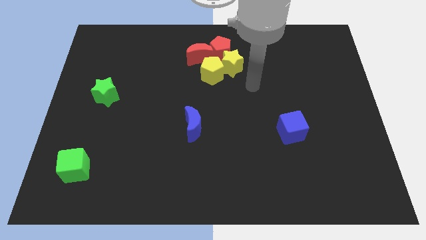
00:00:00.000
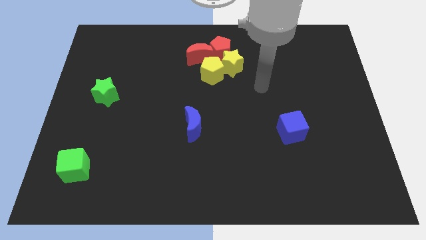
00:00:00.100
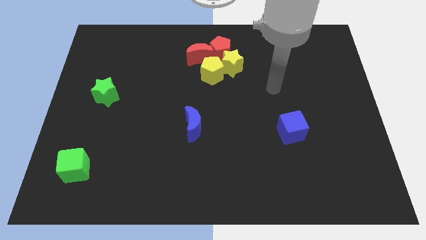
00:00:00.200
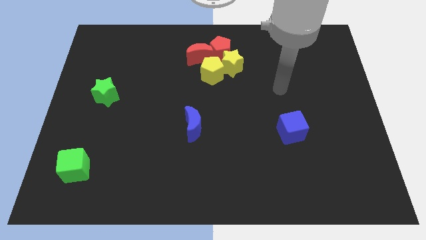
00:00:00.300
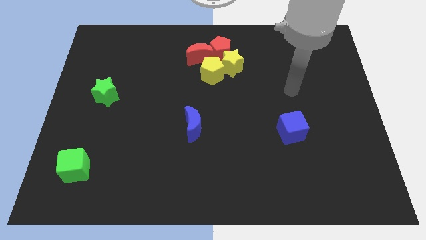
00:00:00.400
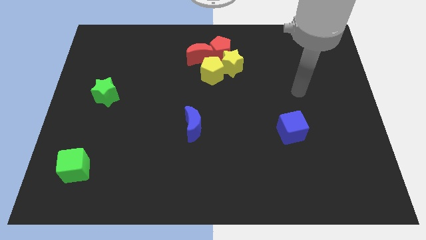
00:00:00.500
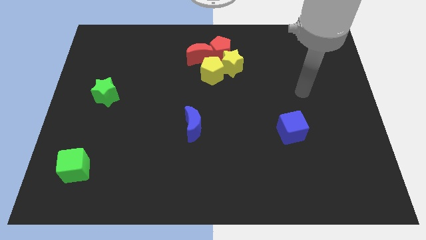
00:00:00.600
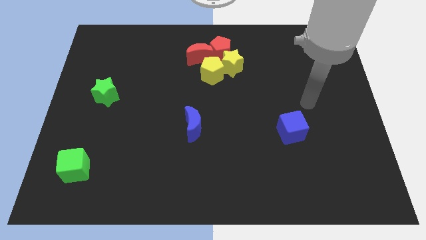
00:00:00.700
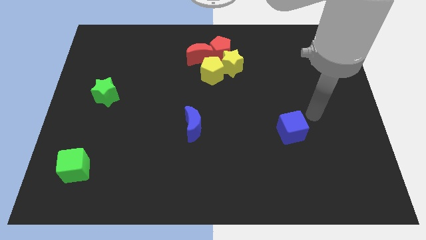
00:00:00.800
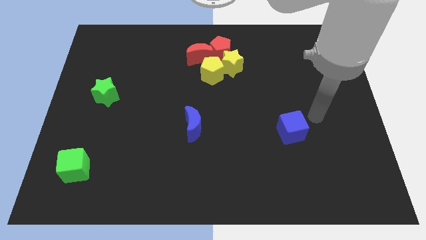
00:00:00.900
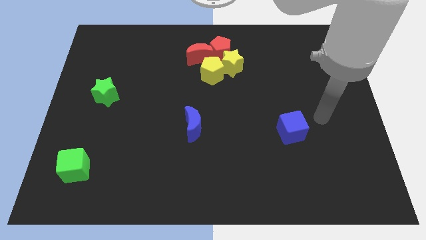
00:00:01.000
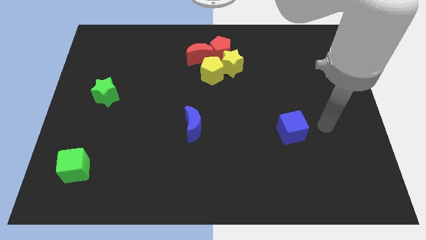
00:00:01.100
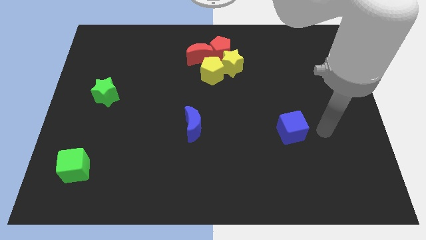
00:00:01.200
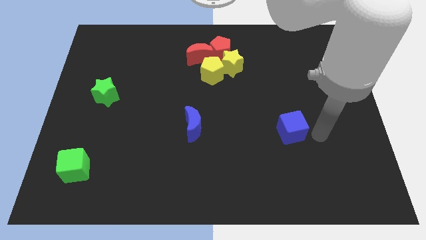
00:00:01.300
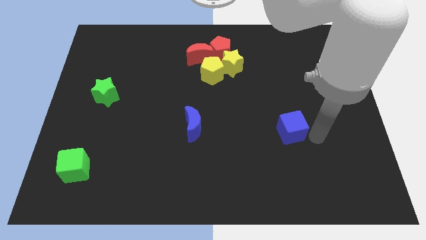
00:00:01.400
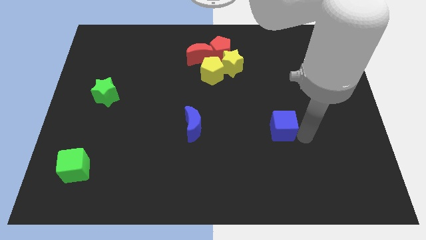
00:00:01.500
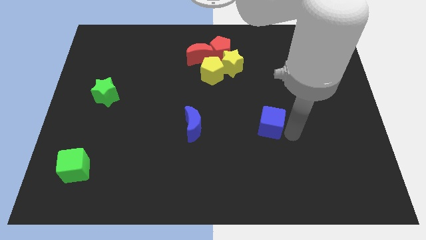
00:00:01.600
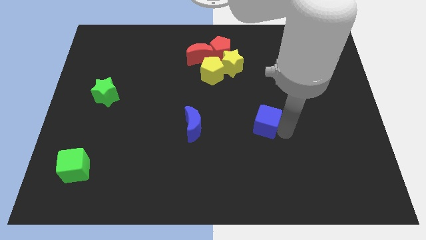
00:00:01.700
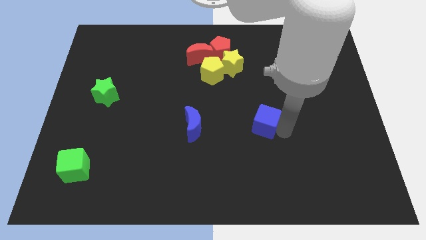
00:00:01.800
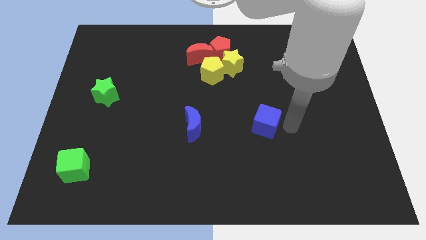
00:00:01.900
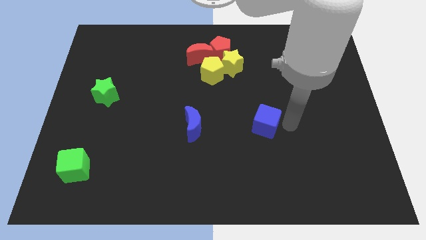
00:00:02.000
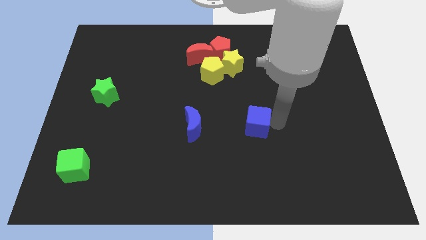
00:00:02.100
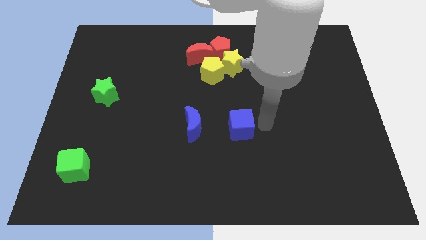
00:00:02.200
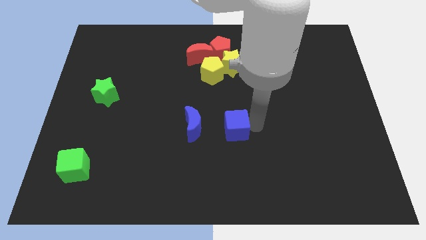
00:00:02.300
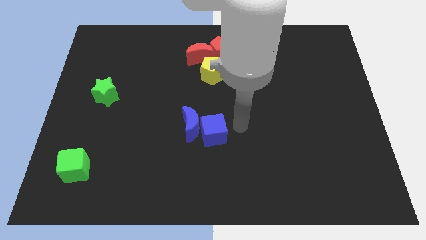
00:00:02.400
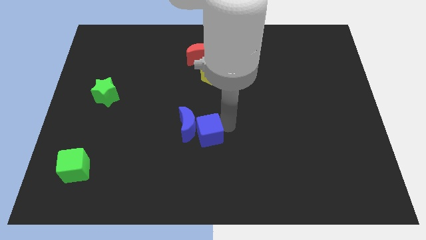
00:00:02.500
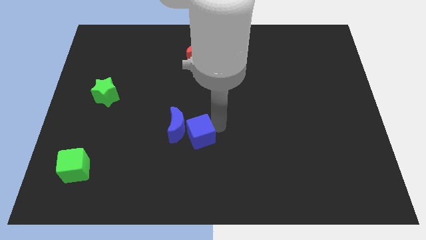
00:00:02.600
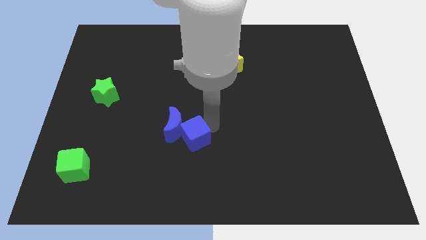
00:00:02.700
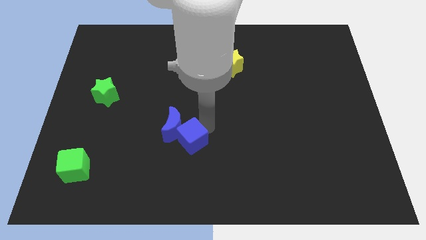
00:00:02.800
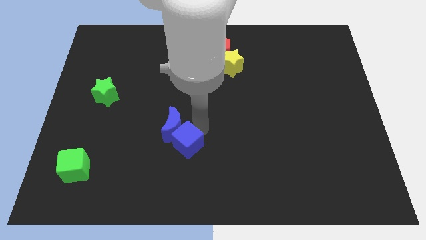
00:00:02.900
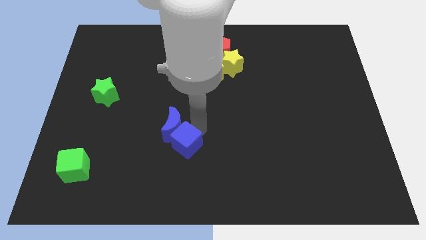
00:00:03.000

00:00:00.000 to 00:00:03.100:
push the blue cube into the blue moon

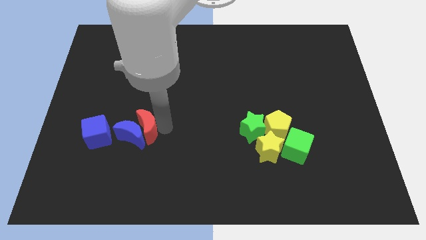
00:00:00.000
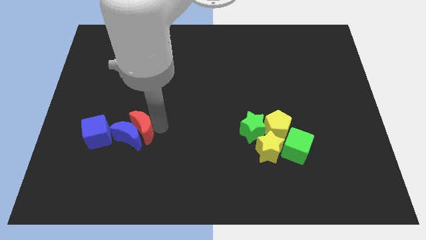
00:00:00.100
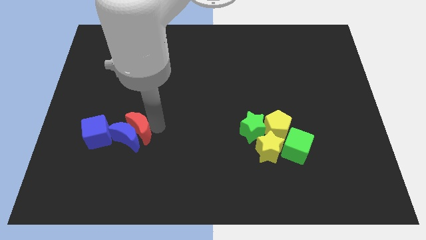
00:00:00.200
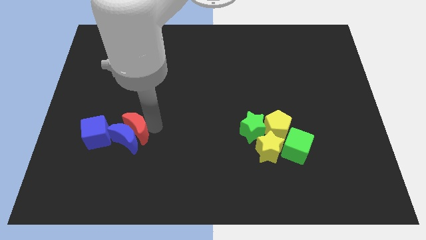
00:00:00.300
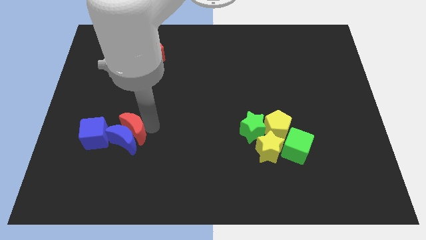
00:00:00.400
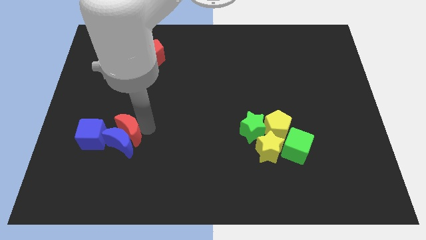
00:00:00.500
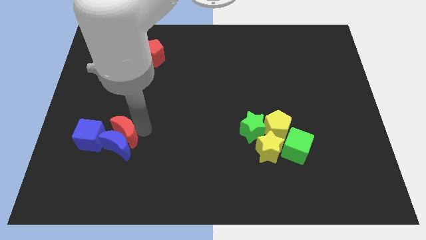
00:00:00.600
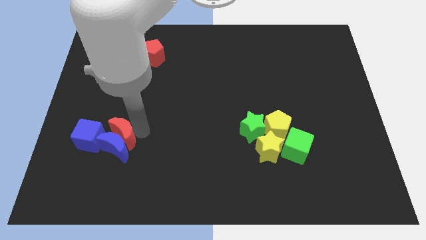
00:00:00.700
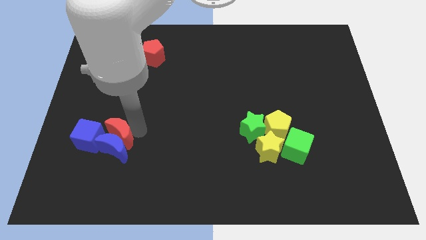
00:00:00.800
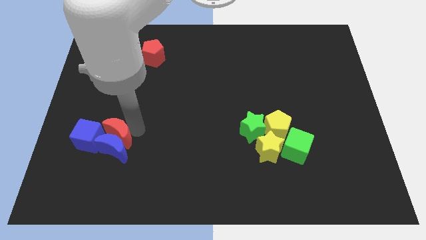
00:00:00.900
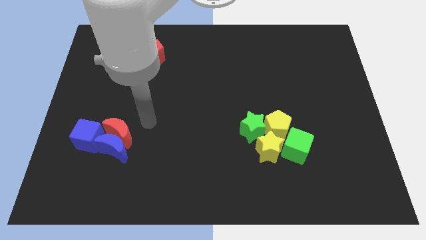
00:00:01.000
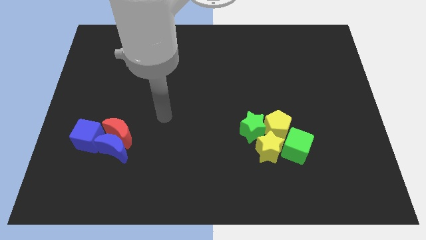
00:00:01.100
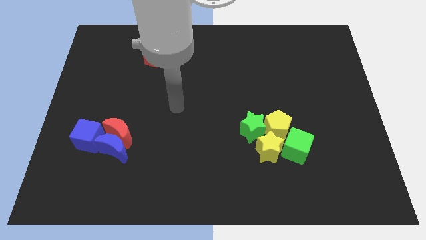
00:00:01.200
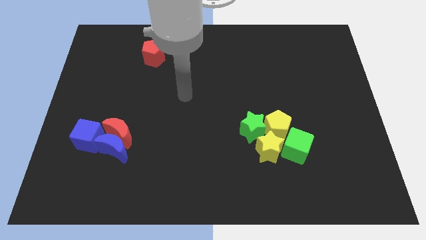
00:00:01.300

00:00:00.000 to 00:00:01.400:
push the red crescent into the blue crescent and blue cube

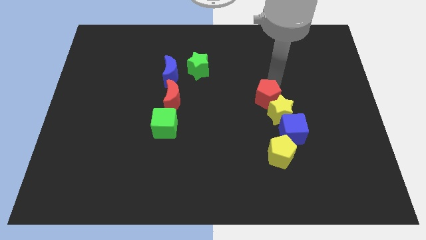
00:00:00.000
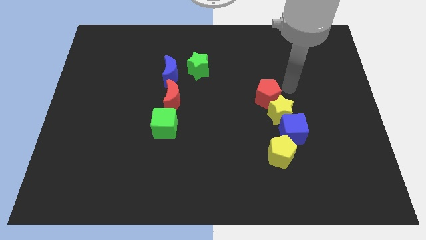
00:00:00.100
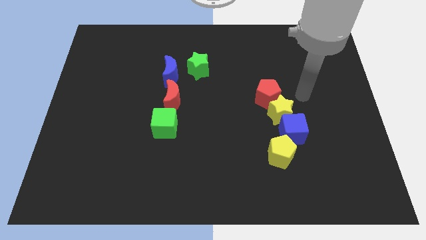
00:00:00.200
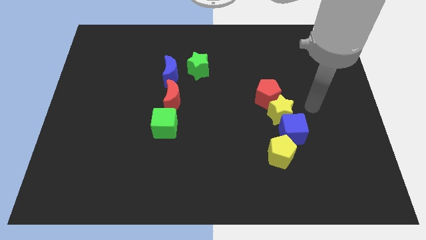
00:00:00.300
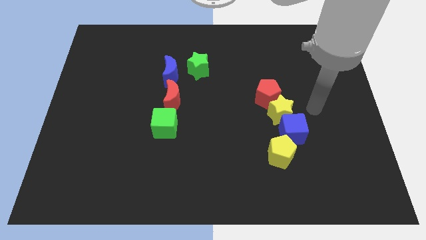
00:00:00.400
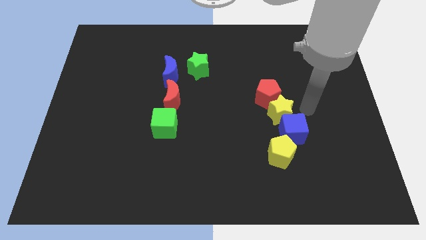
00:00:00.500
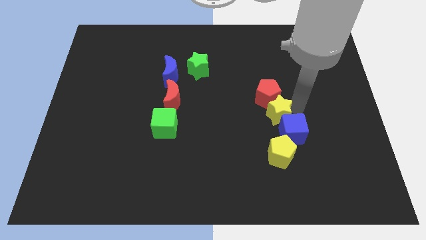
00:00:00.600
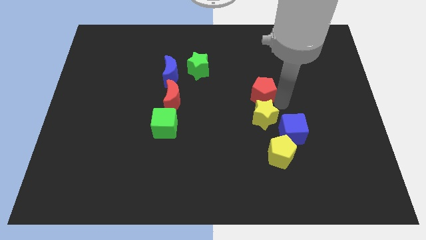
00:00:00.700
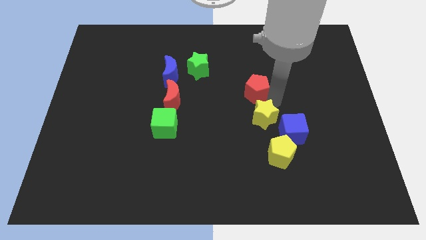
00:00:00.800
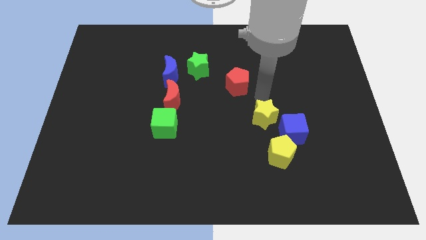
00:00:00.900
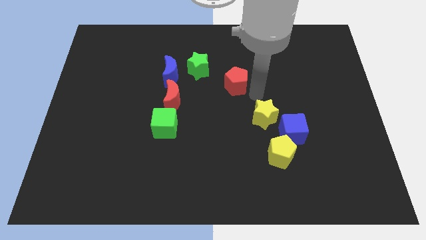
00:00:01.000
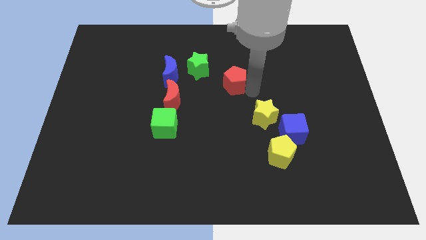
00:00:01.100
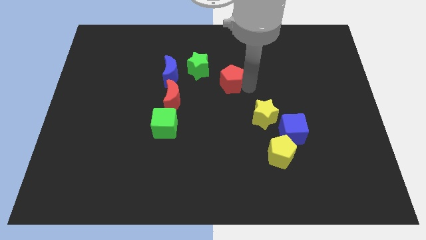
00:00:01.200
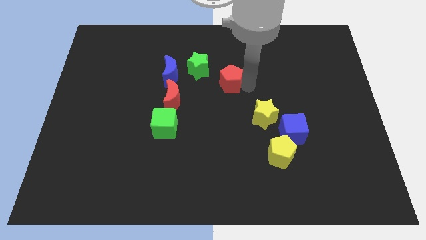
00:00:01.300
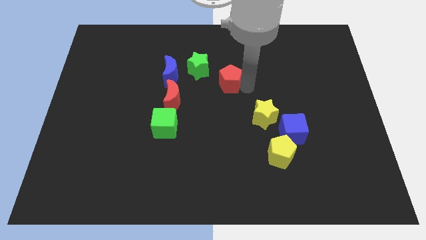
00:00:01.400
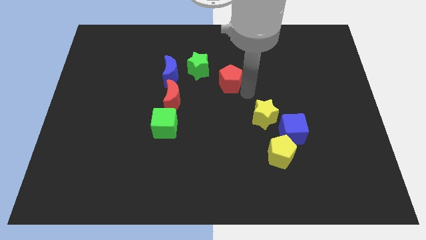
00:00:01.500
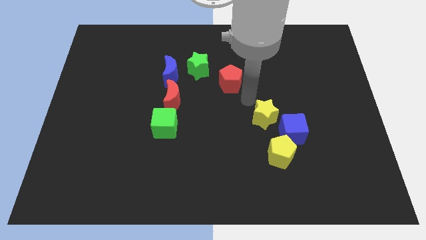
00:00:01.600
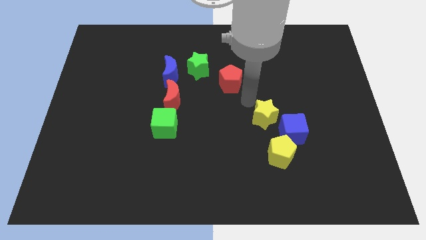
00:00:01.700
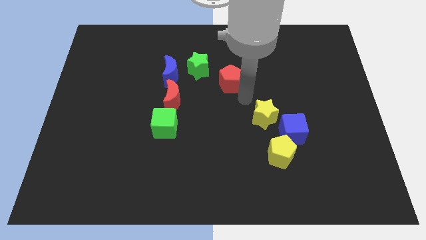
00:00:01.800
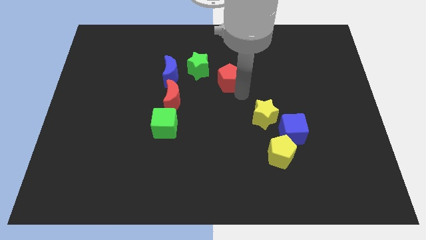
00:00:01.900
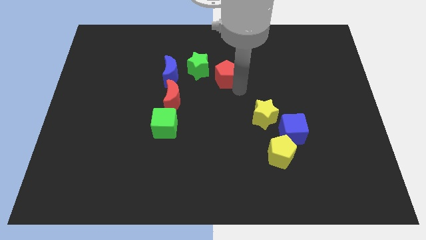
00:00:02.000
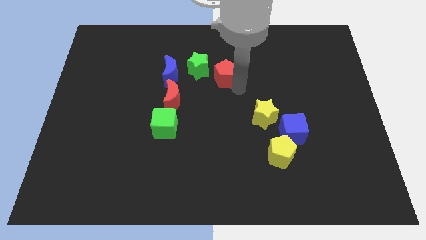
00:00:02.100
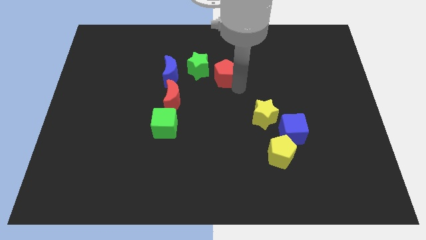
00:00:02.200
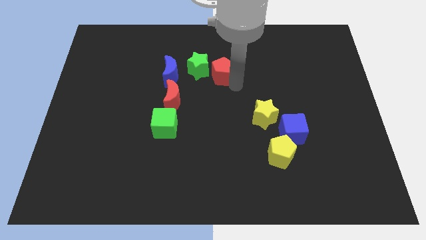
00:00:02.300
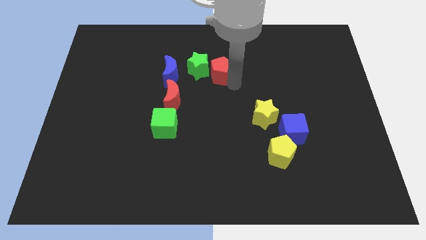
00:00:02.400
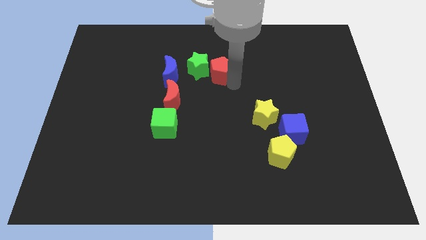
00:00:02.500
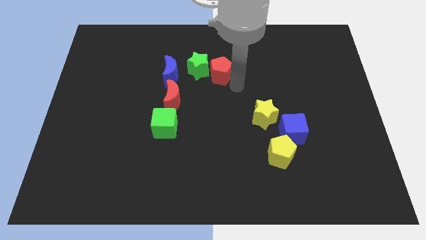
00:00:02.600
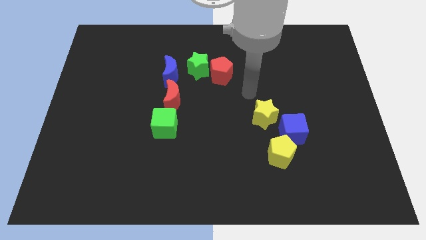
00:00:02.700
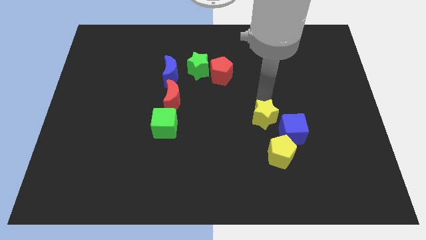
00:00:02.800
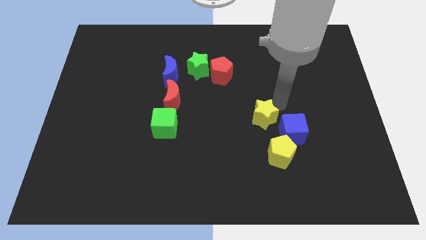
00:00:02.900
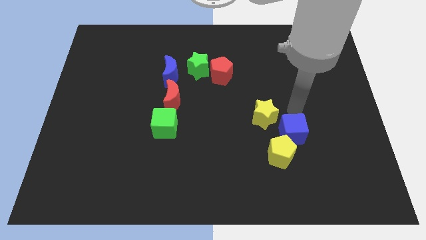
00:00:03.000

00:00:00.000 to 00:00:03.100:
move the red pentagon to the bottom right side of the green star

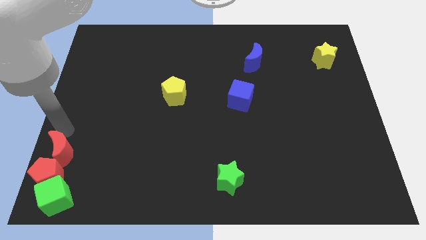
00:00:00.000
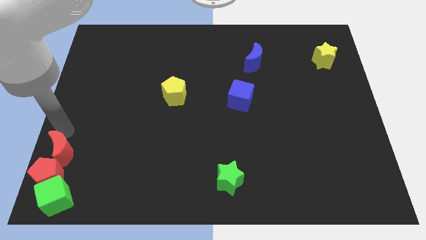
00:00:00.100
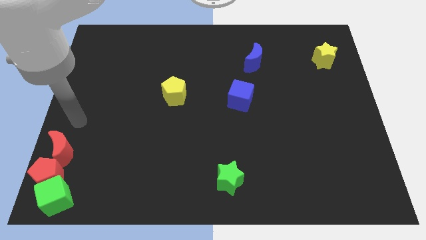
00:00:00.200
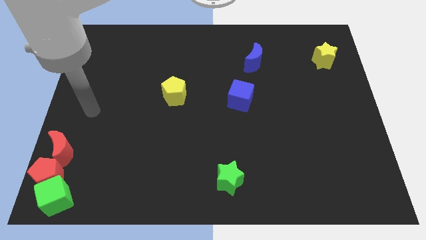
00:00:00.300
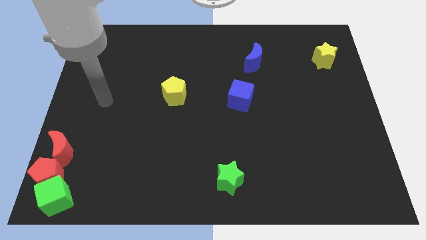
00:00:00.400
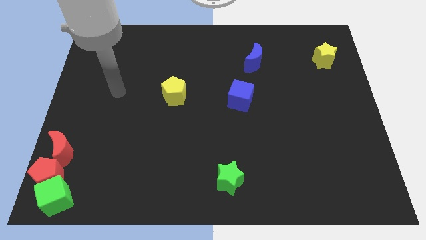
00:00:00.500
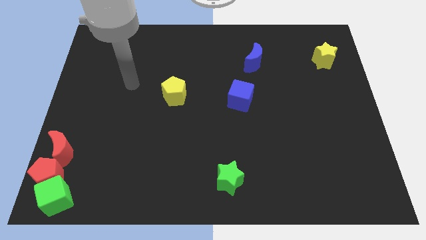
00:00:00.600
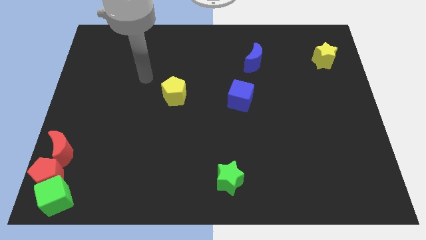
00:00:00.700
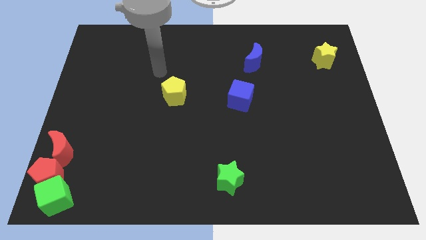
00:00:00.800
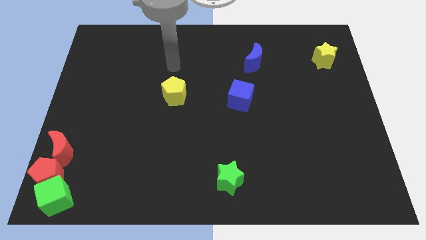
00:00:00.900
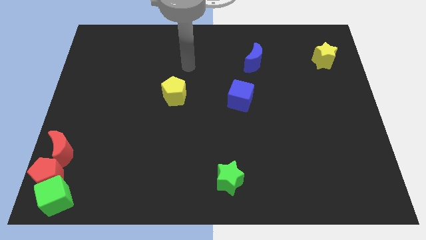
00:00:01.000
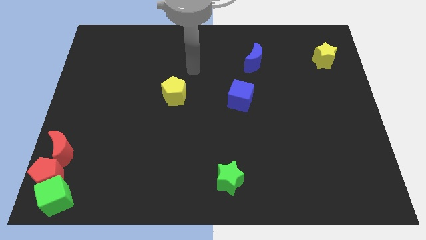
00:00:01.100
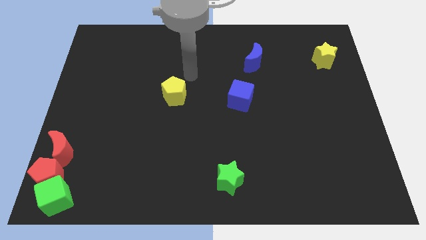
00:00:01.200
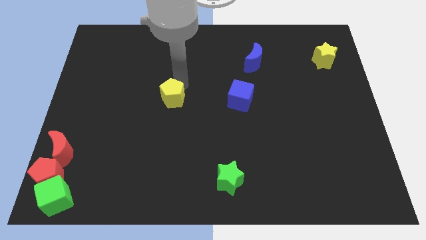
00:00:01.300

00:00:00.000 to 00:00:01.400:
move your arm towards the top of yellow pentagon
